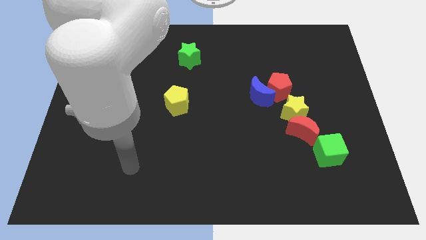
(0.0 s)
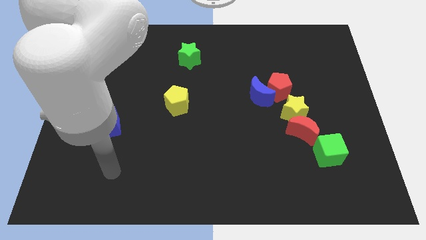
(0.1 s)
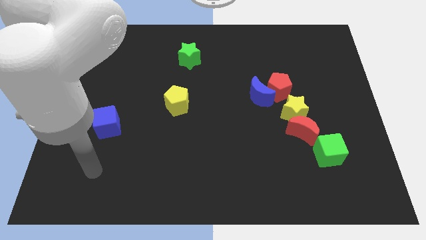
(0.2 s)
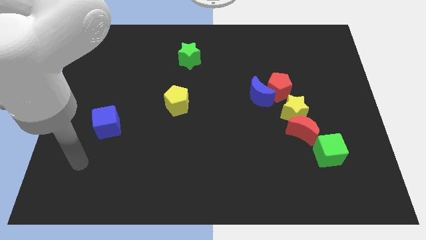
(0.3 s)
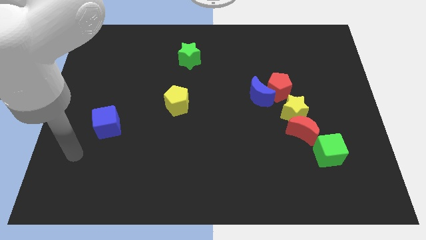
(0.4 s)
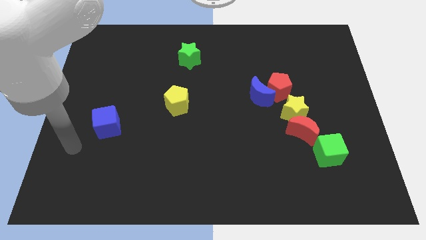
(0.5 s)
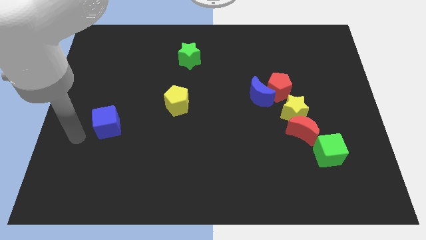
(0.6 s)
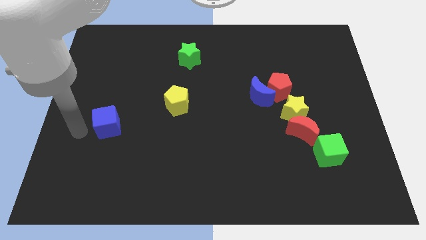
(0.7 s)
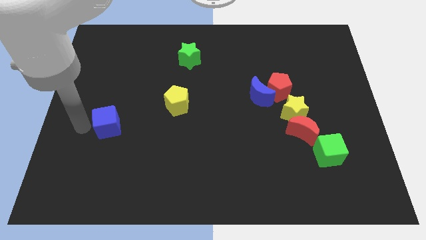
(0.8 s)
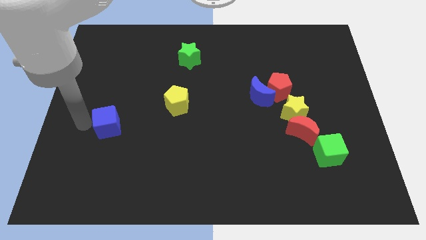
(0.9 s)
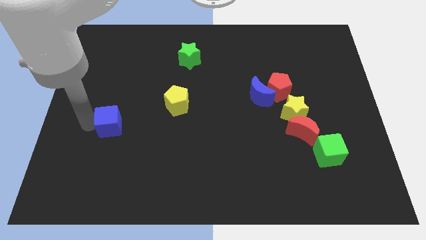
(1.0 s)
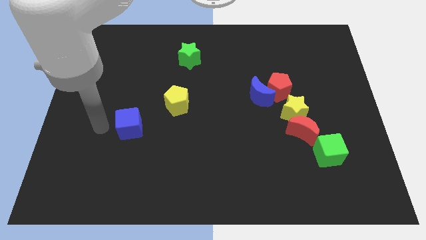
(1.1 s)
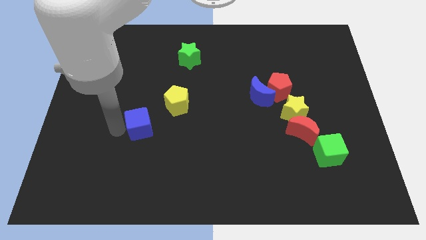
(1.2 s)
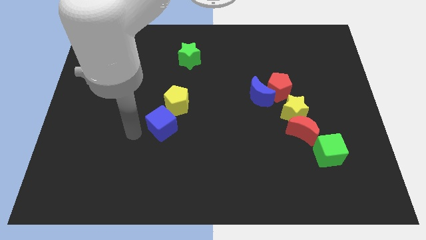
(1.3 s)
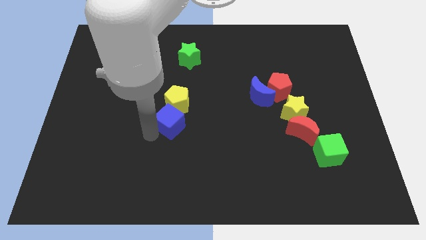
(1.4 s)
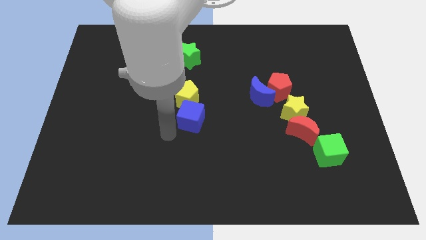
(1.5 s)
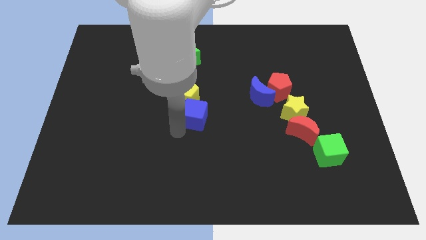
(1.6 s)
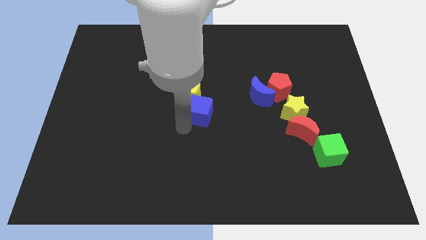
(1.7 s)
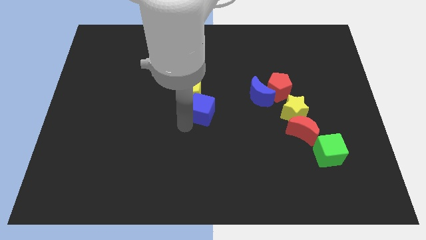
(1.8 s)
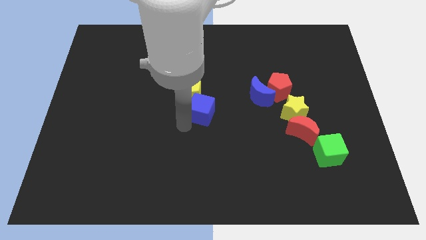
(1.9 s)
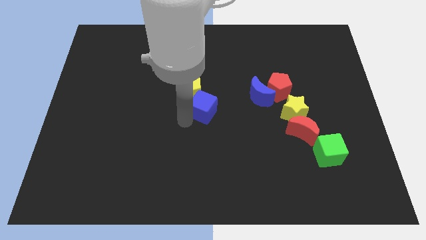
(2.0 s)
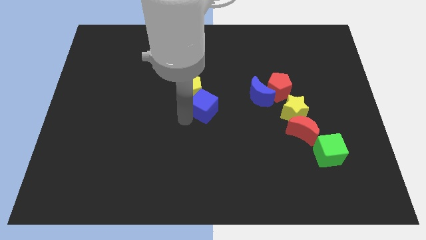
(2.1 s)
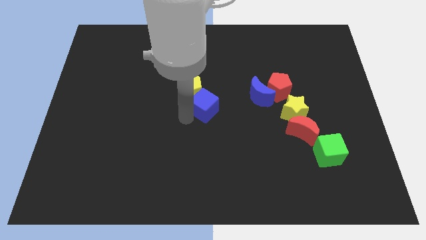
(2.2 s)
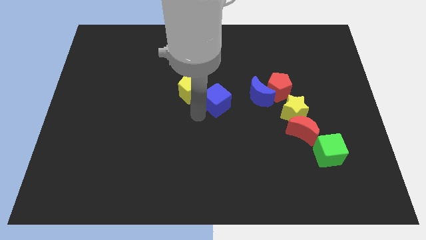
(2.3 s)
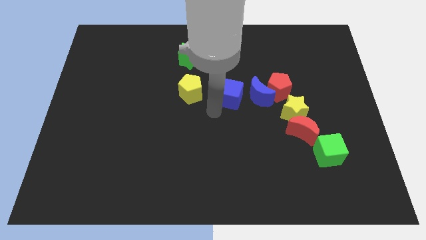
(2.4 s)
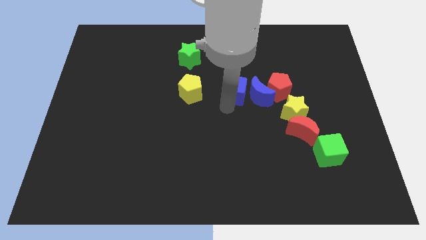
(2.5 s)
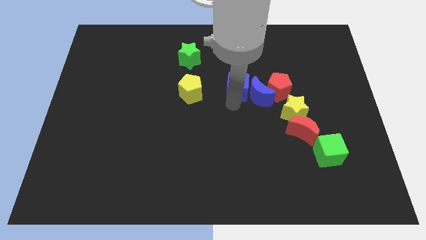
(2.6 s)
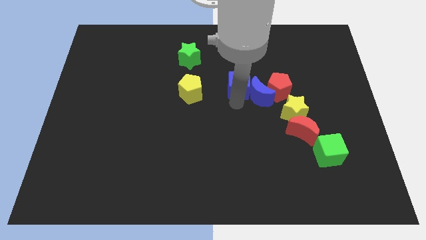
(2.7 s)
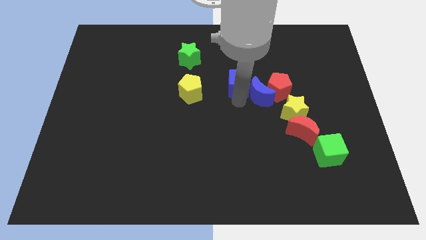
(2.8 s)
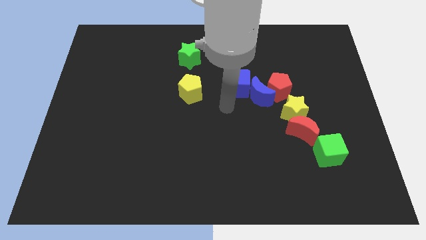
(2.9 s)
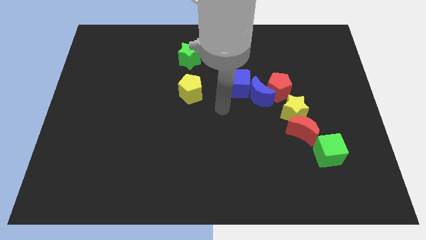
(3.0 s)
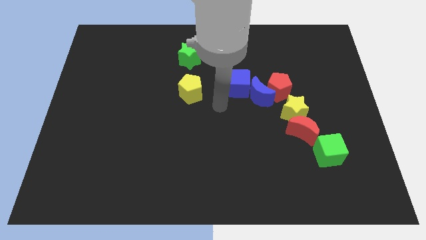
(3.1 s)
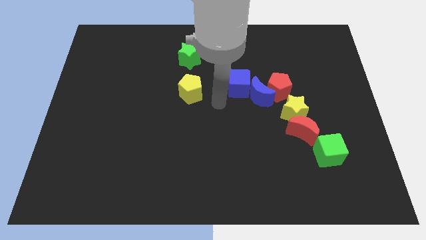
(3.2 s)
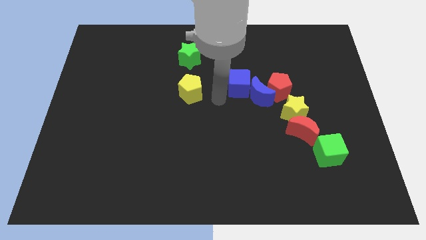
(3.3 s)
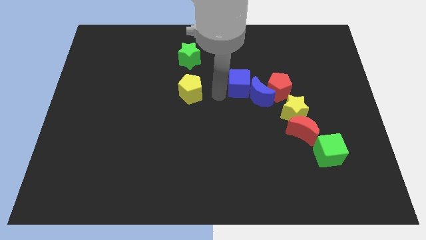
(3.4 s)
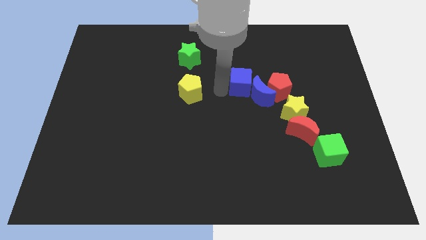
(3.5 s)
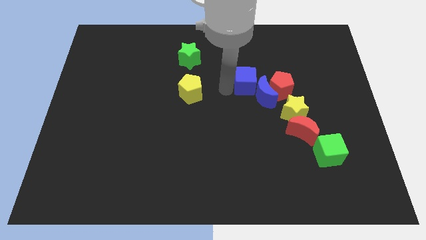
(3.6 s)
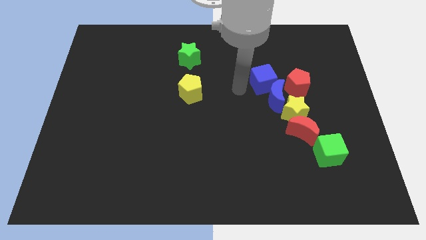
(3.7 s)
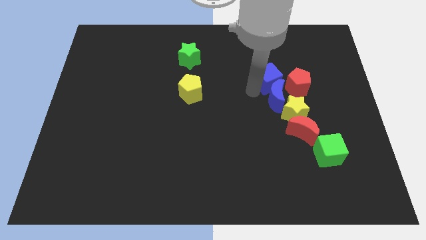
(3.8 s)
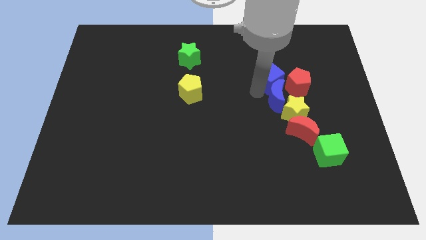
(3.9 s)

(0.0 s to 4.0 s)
put the blue cube above the blue moon

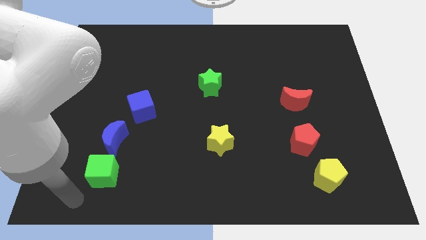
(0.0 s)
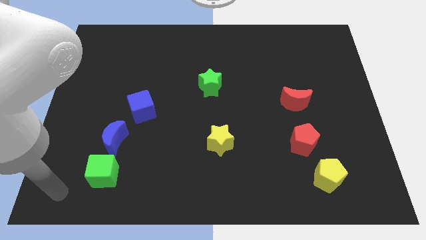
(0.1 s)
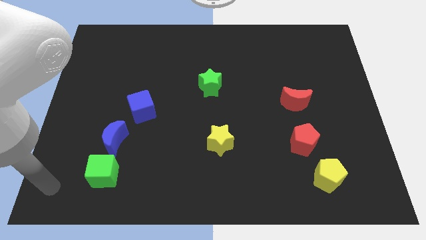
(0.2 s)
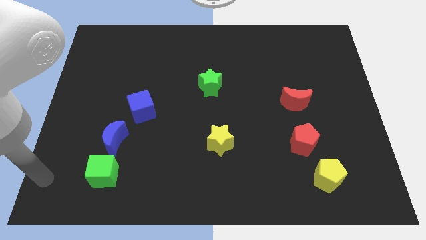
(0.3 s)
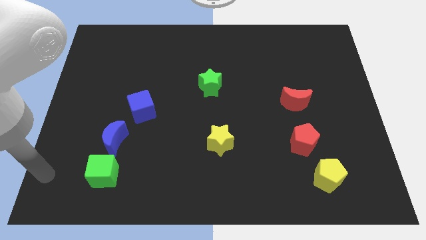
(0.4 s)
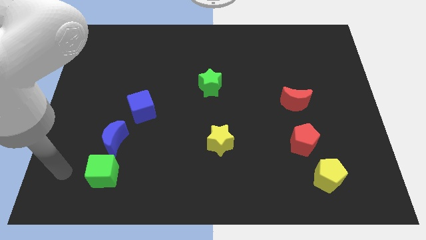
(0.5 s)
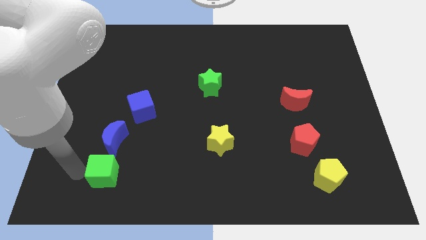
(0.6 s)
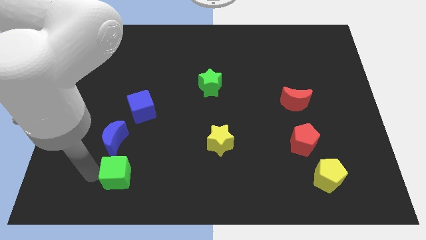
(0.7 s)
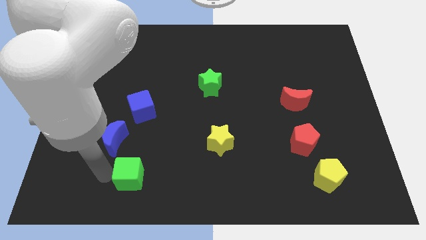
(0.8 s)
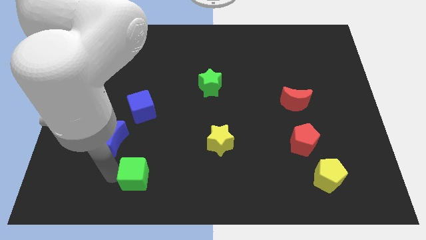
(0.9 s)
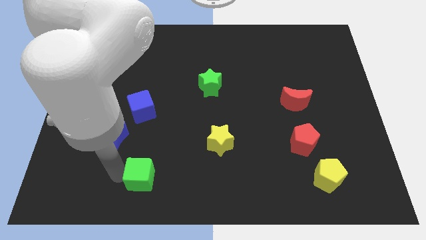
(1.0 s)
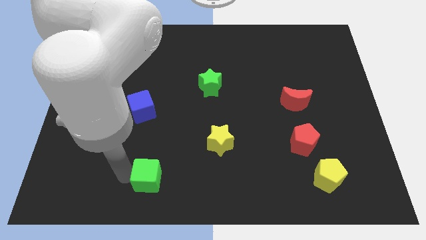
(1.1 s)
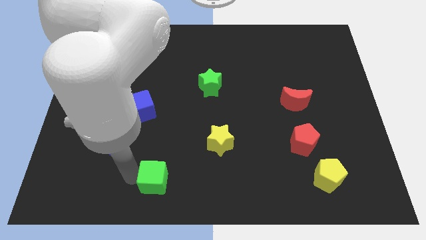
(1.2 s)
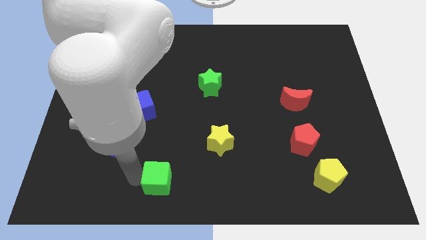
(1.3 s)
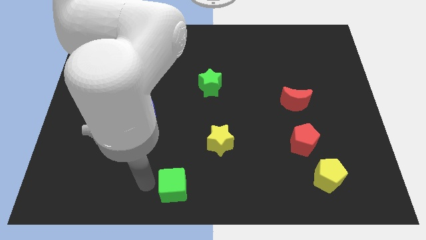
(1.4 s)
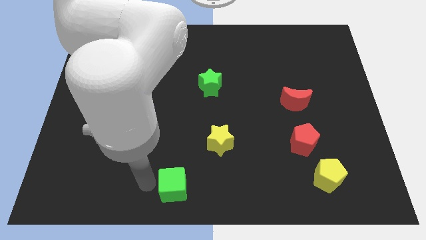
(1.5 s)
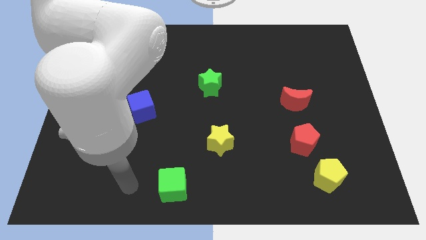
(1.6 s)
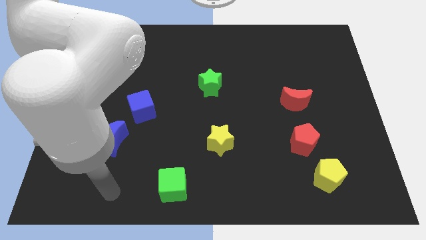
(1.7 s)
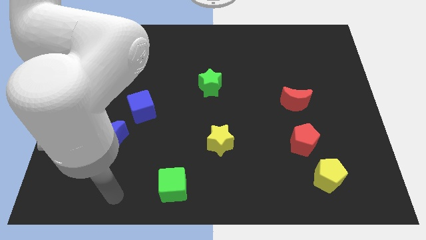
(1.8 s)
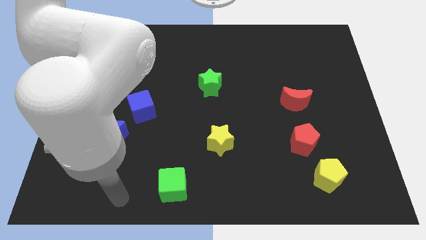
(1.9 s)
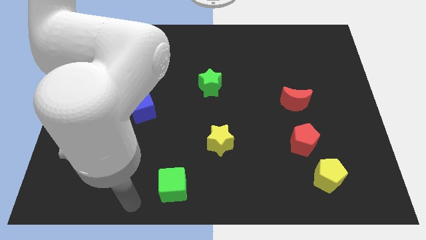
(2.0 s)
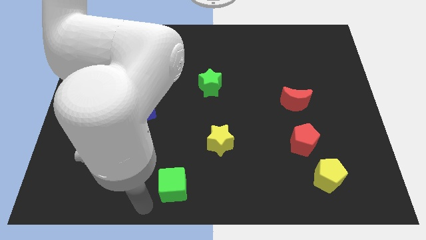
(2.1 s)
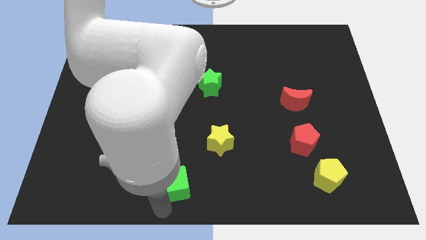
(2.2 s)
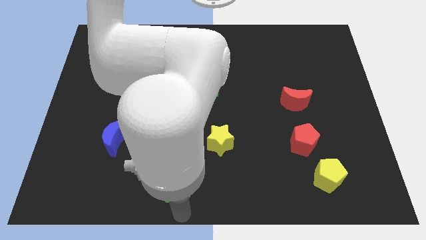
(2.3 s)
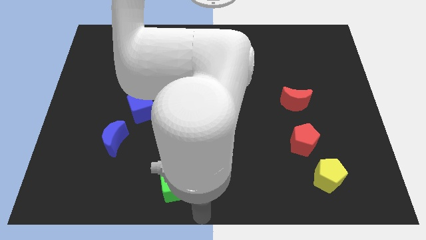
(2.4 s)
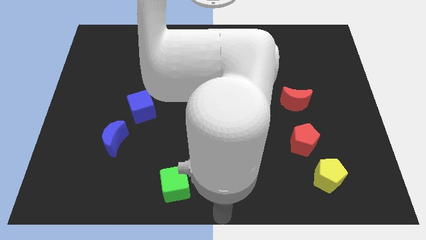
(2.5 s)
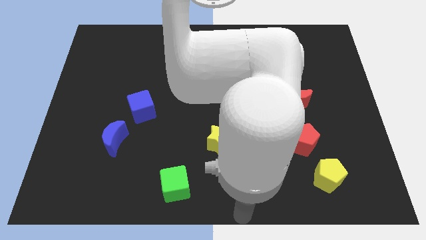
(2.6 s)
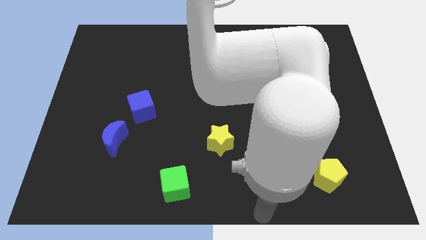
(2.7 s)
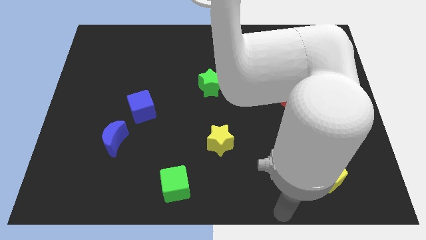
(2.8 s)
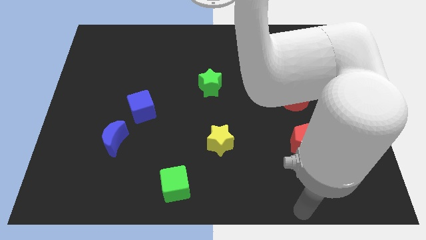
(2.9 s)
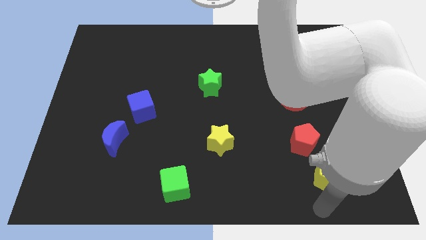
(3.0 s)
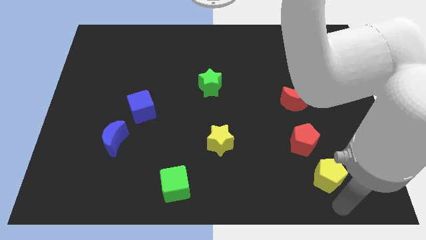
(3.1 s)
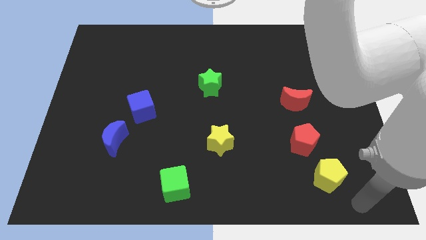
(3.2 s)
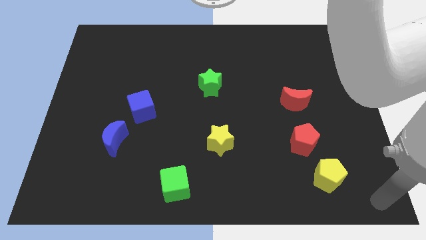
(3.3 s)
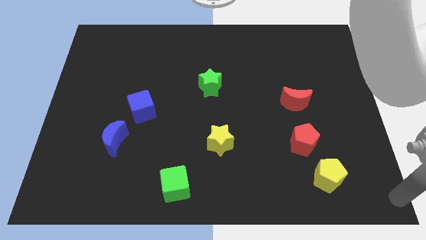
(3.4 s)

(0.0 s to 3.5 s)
place green cube to the bottom left of yellow star

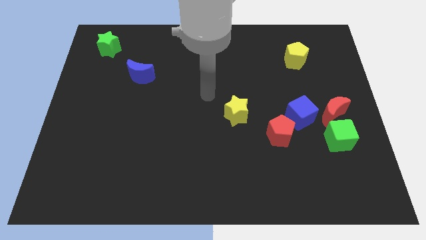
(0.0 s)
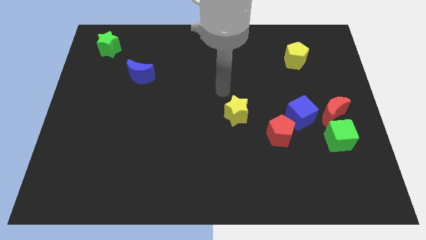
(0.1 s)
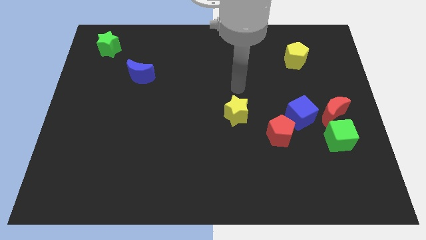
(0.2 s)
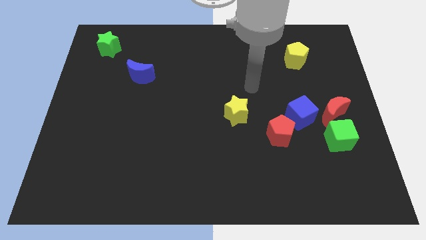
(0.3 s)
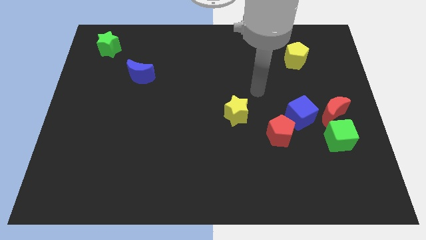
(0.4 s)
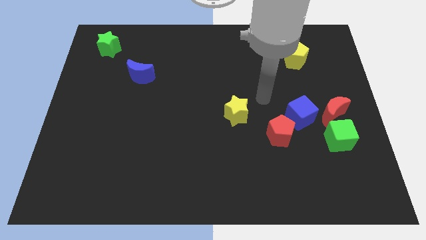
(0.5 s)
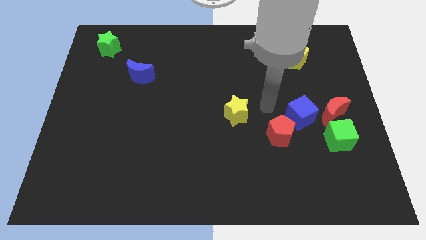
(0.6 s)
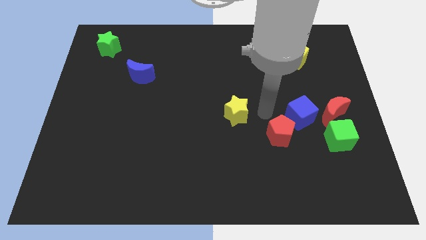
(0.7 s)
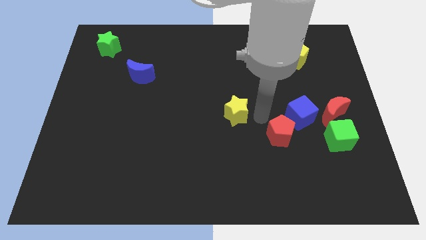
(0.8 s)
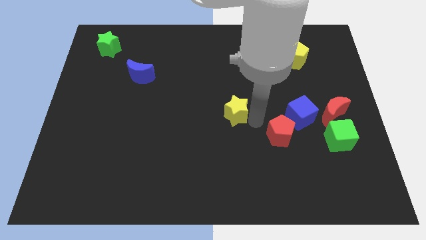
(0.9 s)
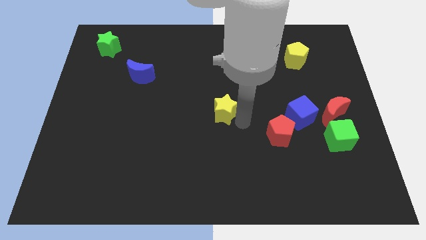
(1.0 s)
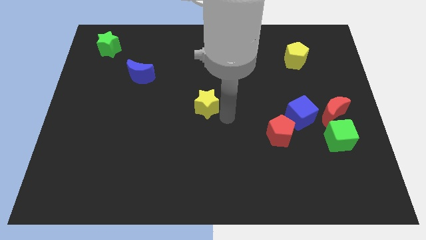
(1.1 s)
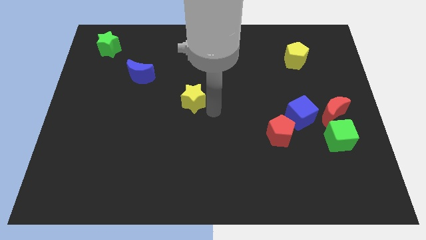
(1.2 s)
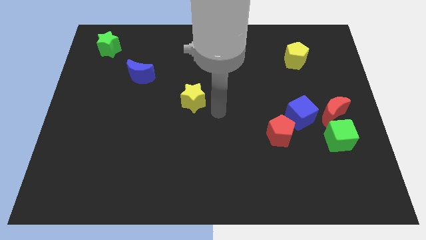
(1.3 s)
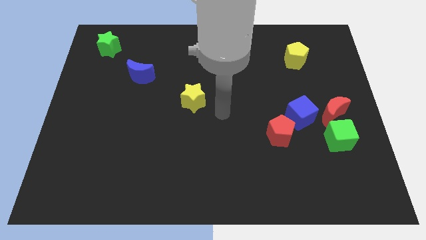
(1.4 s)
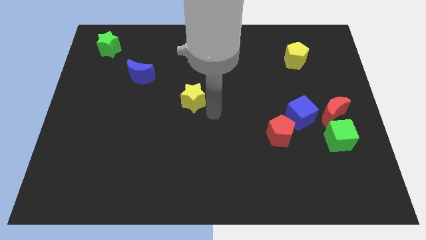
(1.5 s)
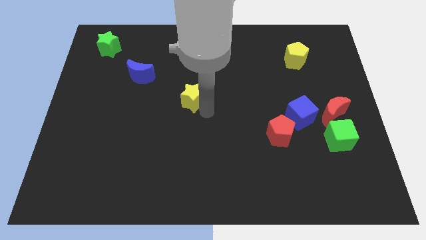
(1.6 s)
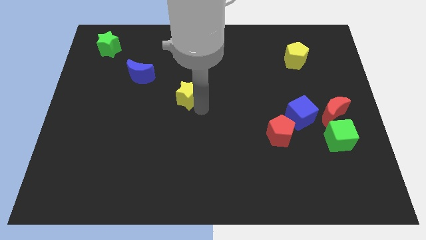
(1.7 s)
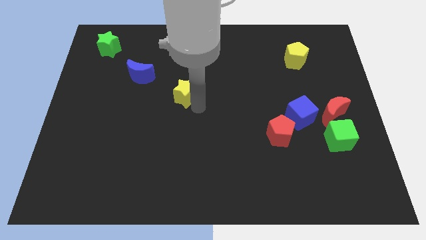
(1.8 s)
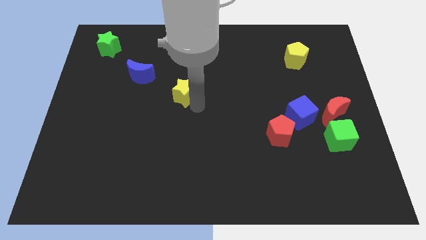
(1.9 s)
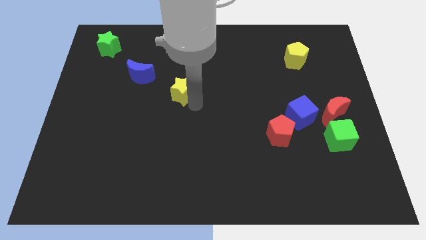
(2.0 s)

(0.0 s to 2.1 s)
move the yellow star towards blue moon
